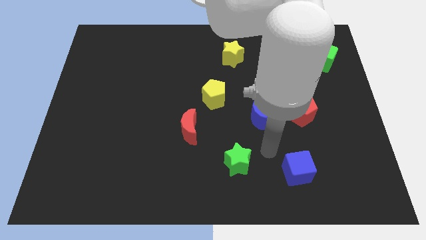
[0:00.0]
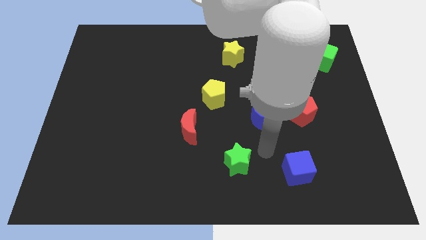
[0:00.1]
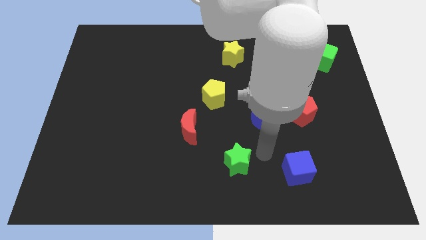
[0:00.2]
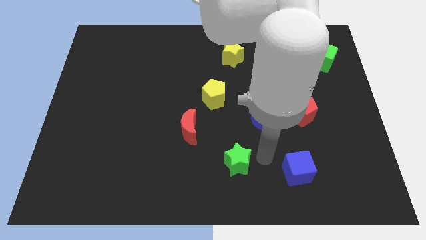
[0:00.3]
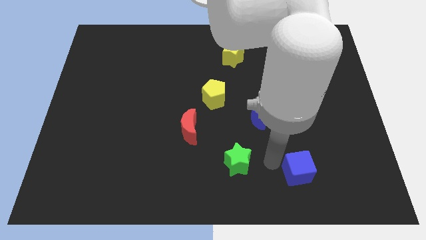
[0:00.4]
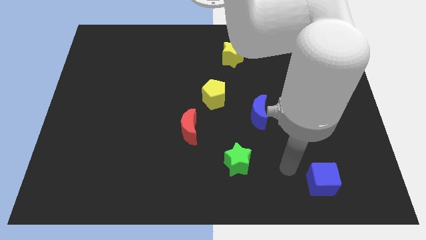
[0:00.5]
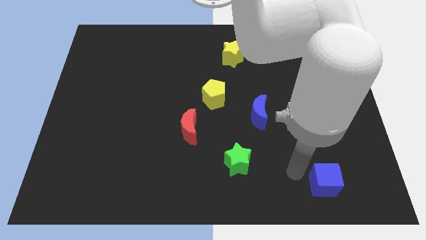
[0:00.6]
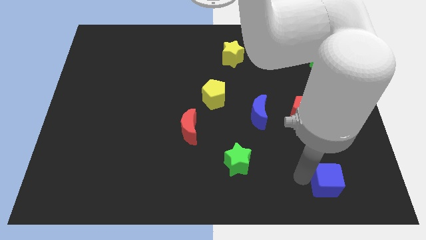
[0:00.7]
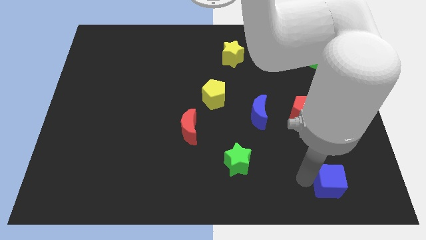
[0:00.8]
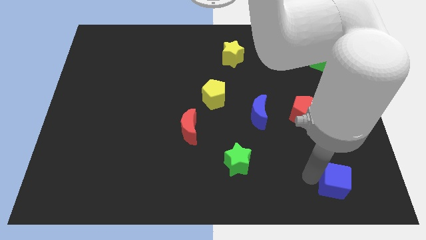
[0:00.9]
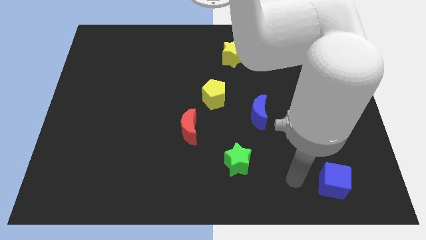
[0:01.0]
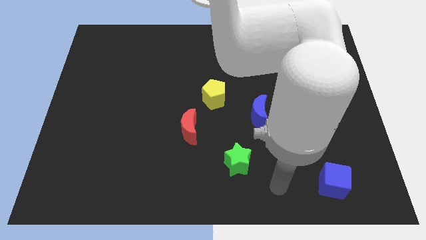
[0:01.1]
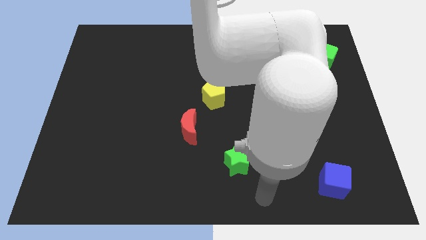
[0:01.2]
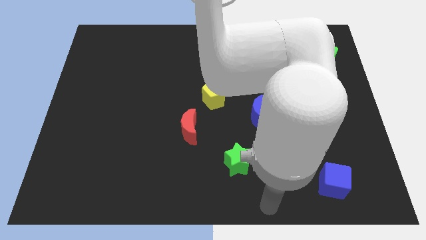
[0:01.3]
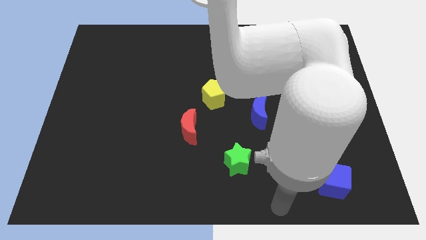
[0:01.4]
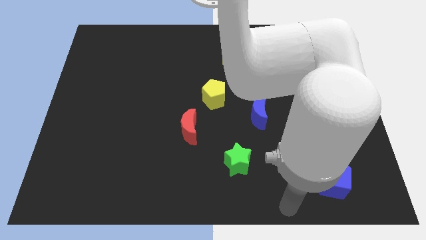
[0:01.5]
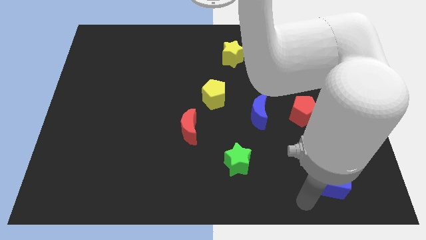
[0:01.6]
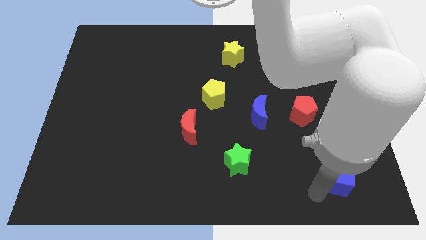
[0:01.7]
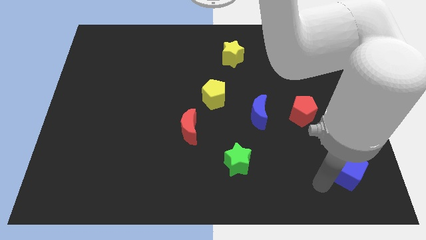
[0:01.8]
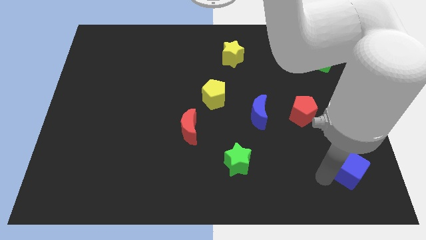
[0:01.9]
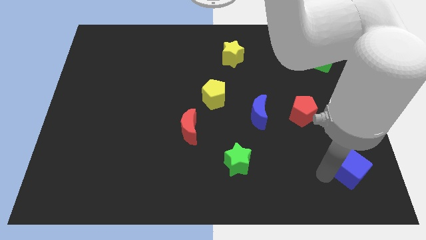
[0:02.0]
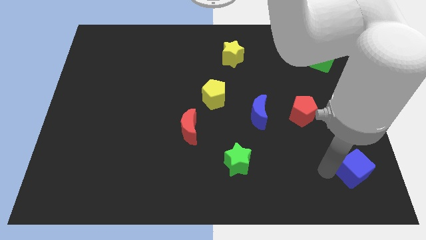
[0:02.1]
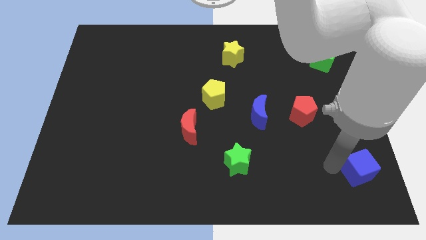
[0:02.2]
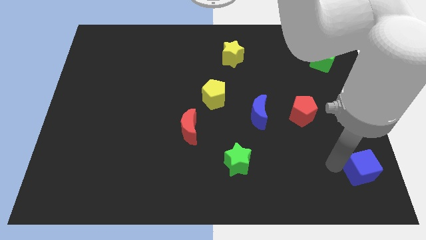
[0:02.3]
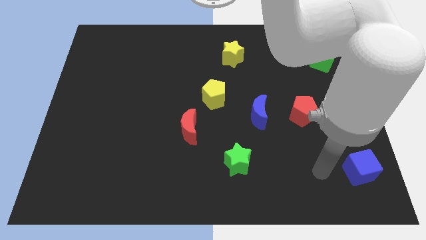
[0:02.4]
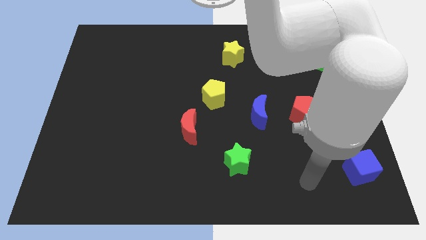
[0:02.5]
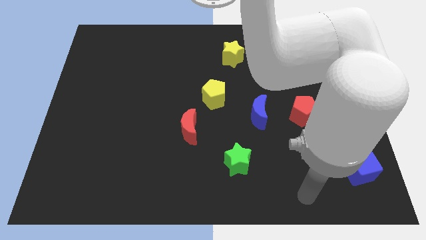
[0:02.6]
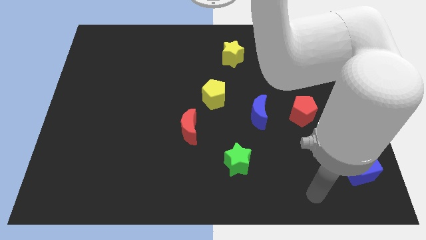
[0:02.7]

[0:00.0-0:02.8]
place the blue cube at the bottom right corner of the board

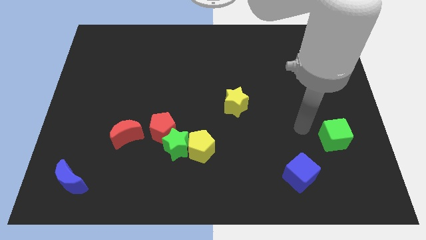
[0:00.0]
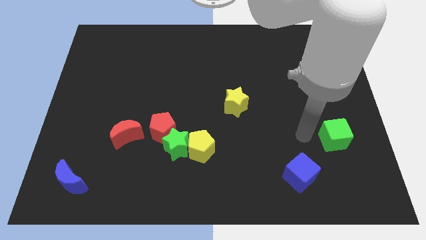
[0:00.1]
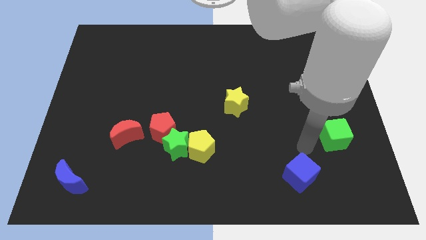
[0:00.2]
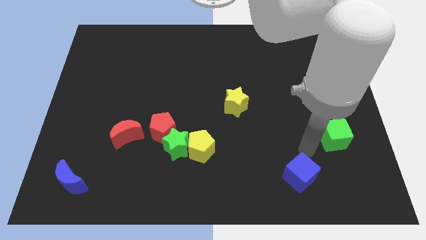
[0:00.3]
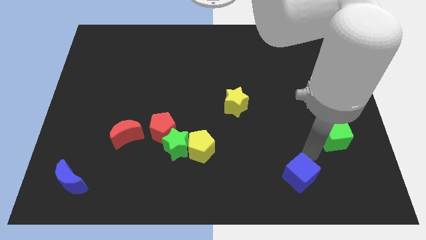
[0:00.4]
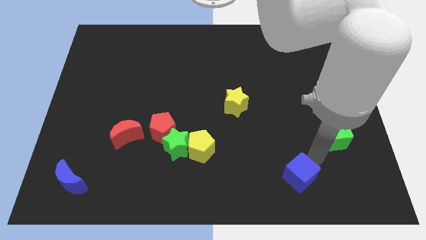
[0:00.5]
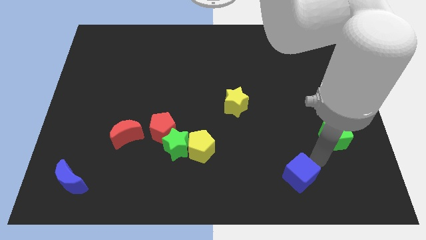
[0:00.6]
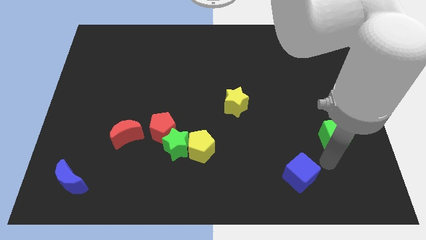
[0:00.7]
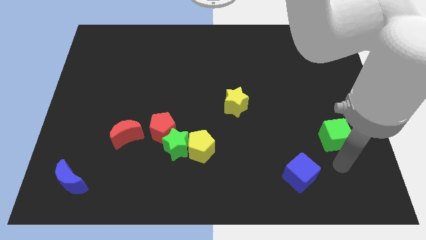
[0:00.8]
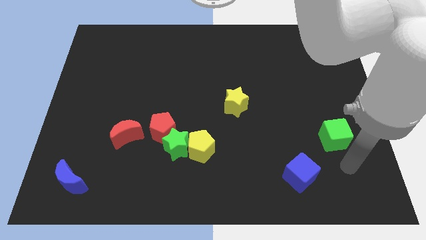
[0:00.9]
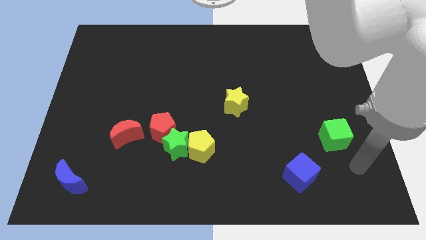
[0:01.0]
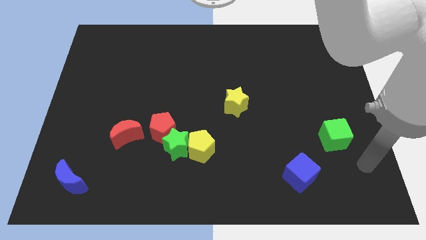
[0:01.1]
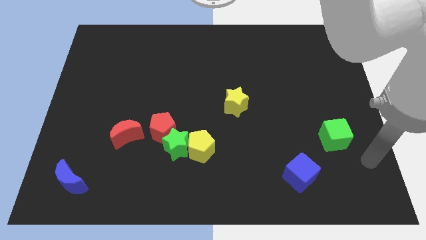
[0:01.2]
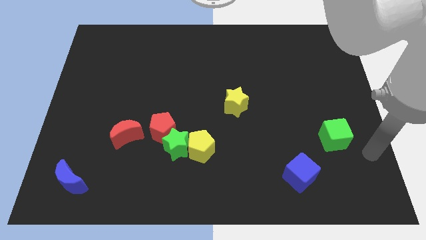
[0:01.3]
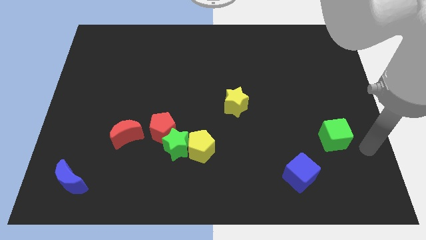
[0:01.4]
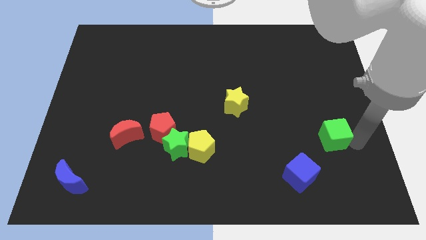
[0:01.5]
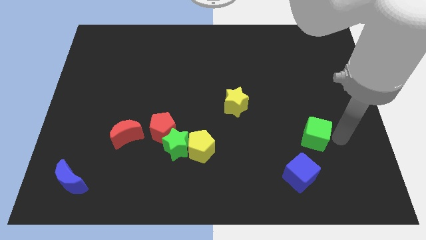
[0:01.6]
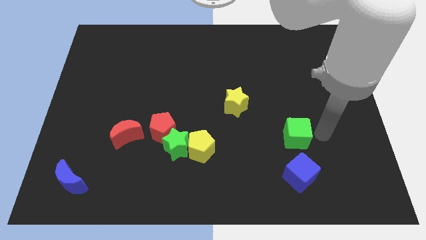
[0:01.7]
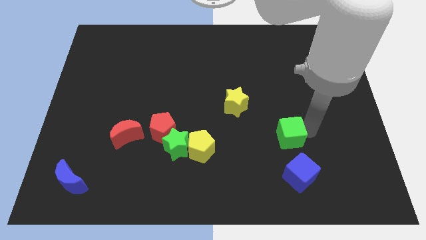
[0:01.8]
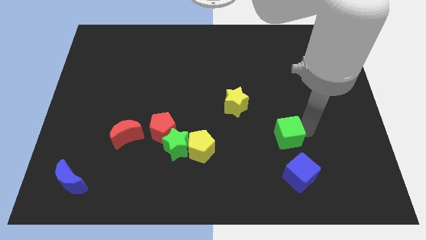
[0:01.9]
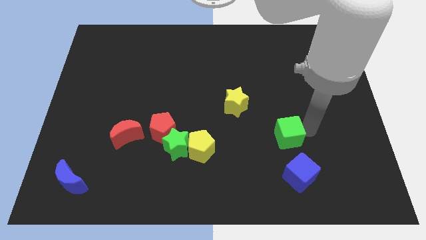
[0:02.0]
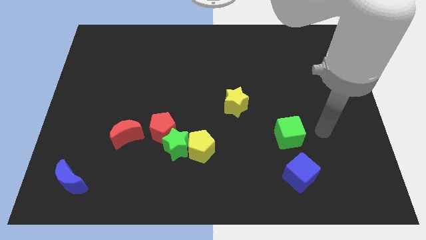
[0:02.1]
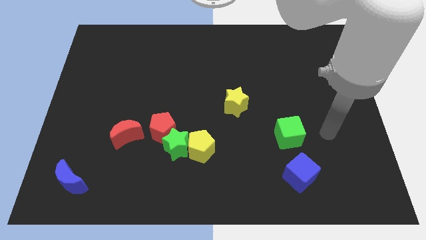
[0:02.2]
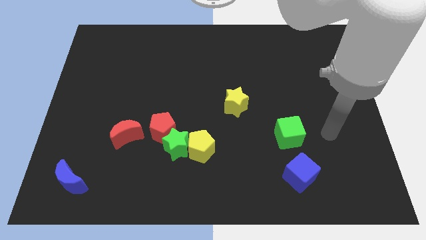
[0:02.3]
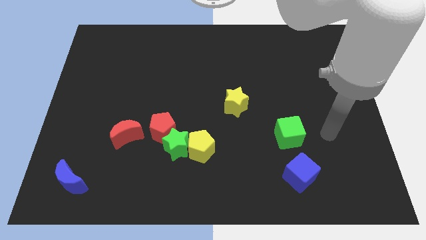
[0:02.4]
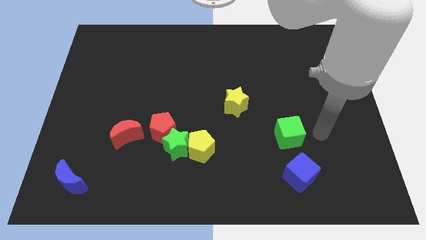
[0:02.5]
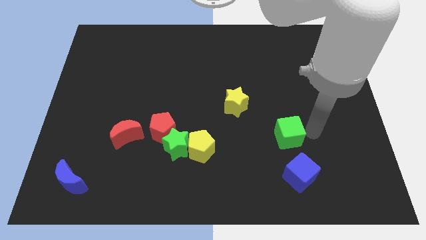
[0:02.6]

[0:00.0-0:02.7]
place the green cube diagonal to the yellow star

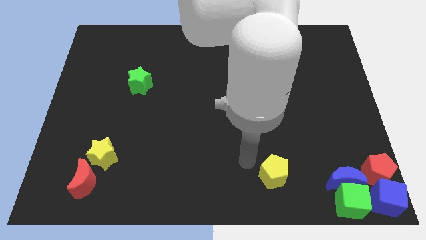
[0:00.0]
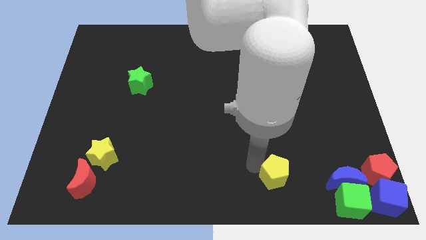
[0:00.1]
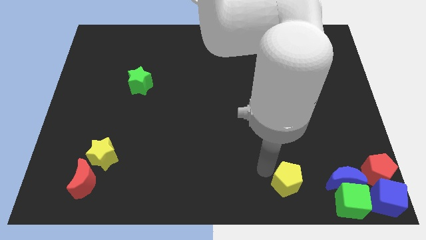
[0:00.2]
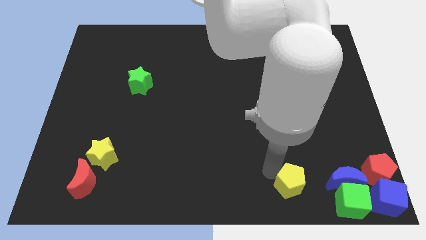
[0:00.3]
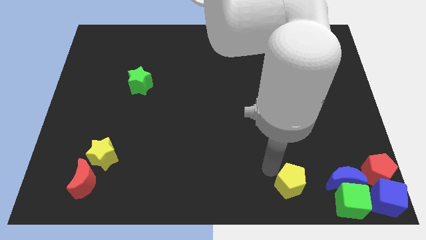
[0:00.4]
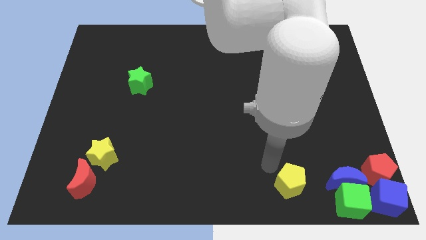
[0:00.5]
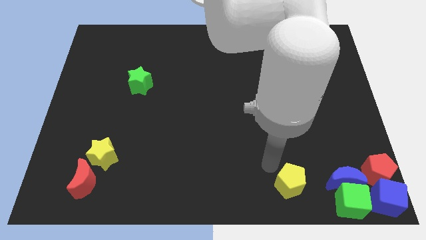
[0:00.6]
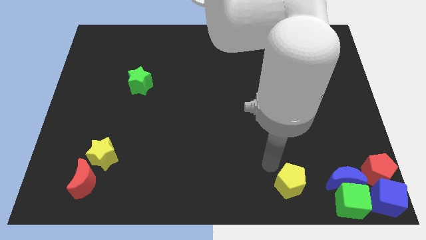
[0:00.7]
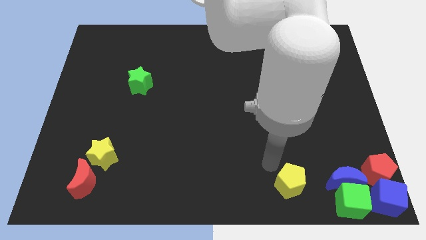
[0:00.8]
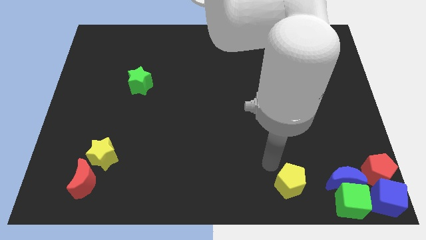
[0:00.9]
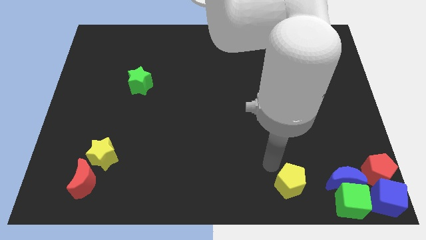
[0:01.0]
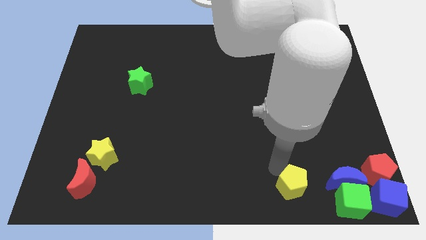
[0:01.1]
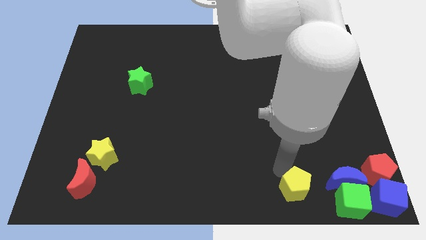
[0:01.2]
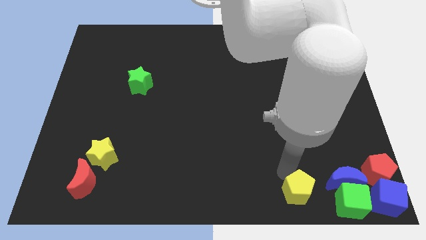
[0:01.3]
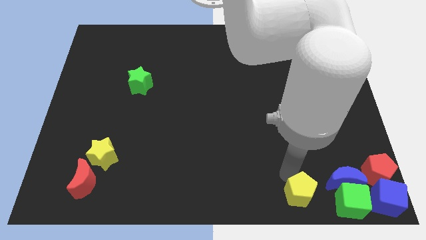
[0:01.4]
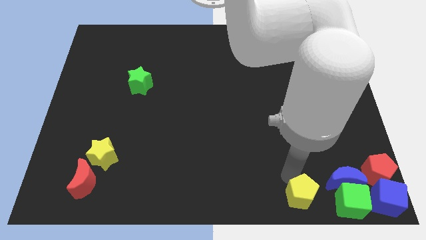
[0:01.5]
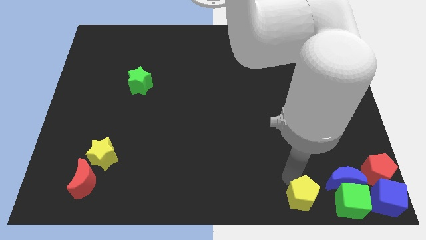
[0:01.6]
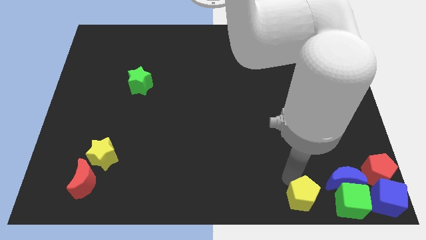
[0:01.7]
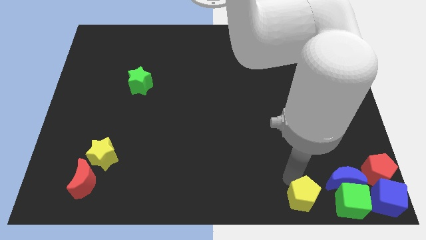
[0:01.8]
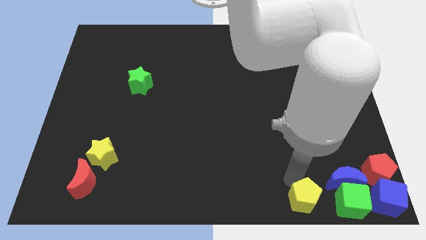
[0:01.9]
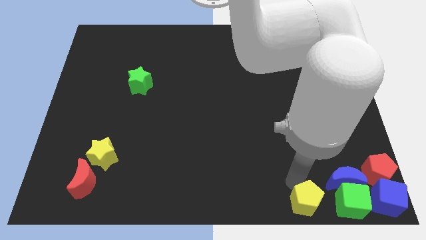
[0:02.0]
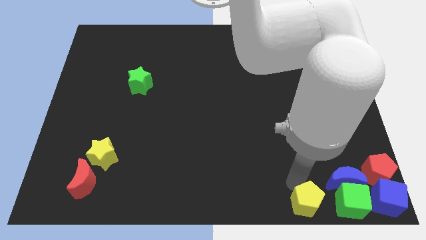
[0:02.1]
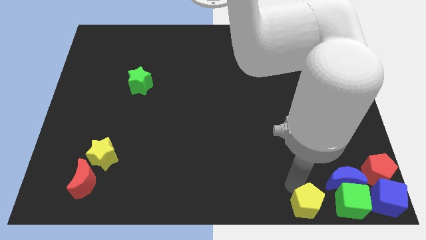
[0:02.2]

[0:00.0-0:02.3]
place the yellow pentagon left to the green cube

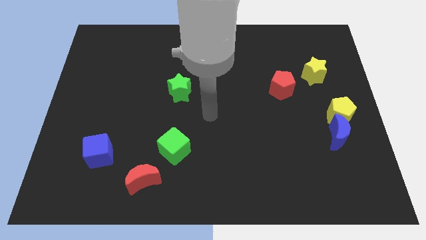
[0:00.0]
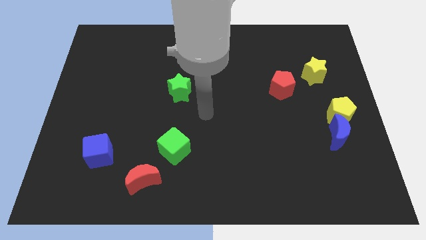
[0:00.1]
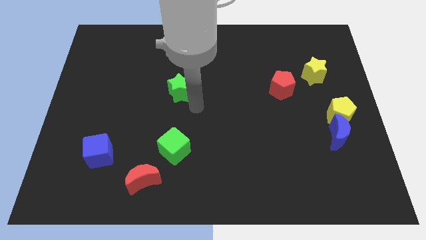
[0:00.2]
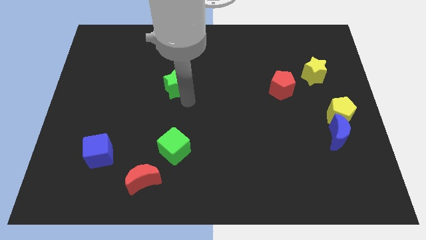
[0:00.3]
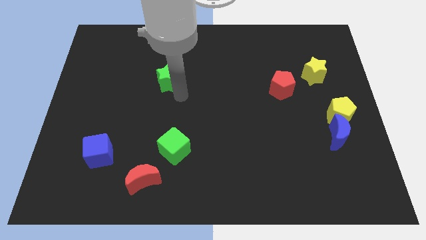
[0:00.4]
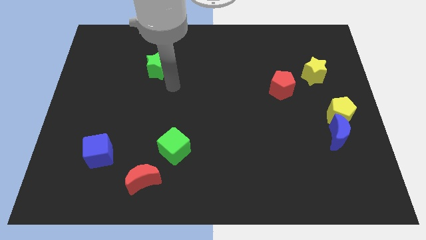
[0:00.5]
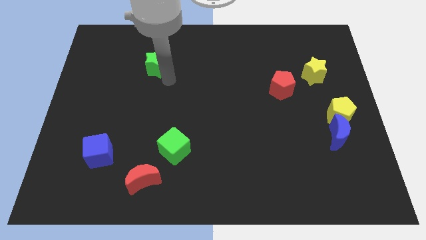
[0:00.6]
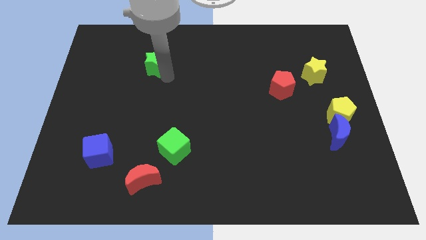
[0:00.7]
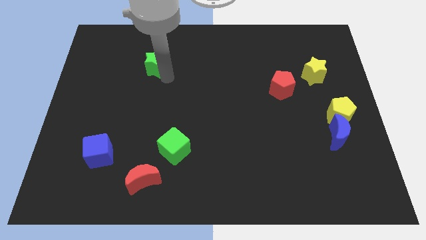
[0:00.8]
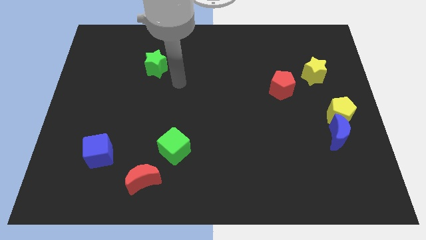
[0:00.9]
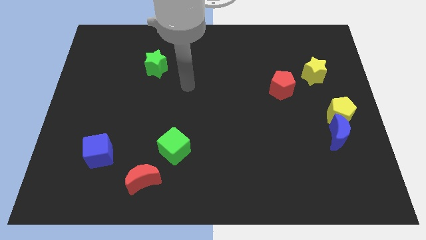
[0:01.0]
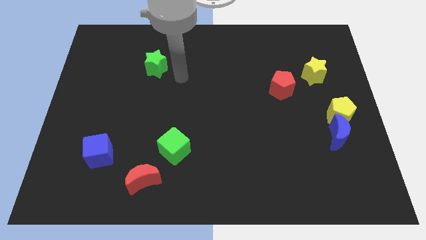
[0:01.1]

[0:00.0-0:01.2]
push the green star towards the top left of the board
